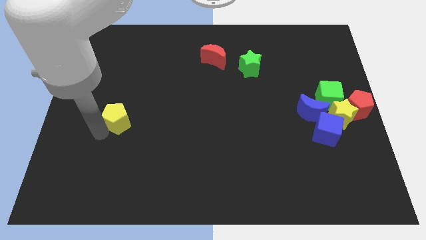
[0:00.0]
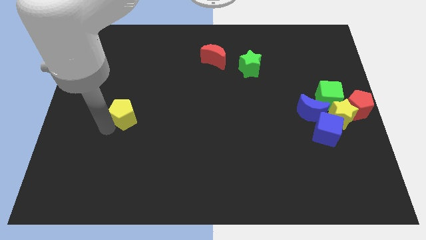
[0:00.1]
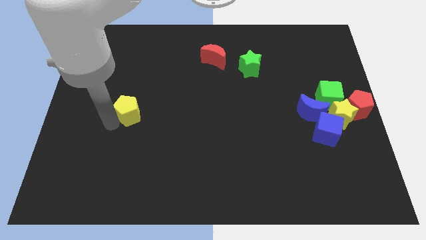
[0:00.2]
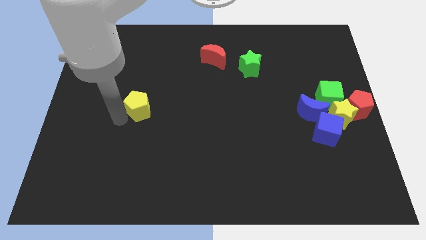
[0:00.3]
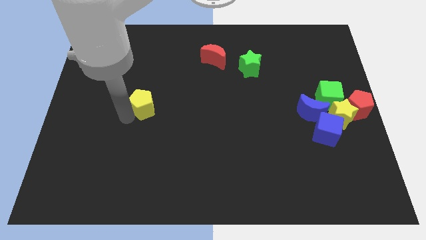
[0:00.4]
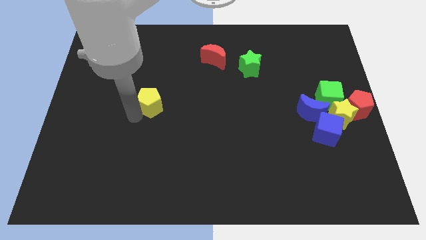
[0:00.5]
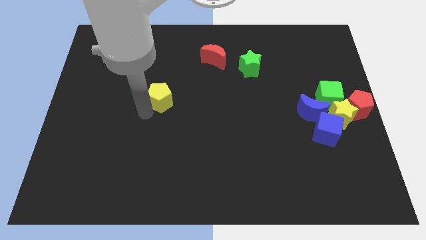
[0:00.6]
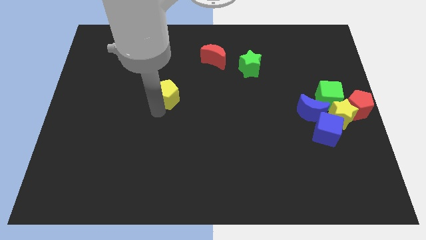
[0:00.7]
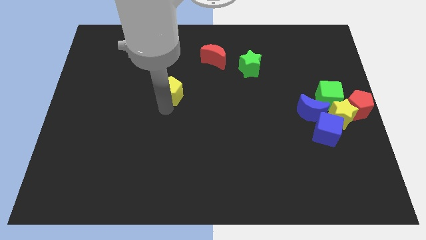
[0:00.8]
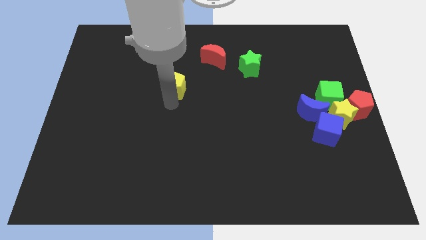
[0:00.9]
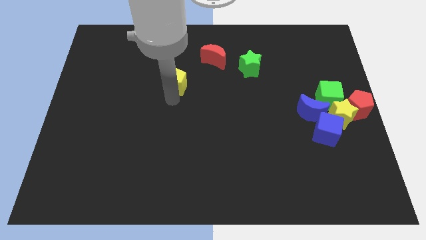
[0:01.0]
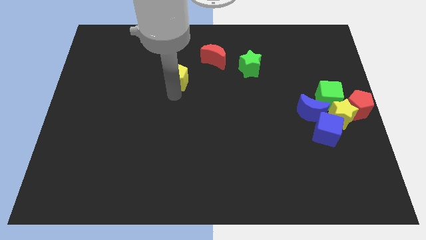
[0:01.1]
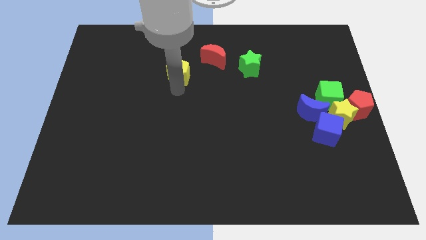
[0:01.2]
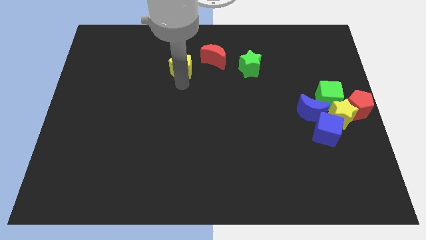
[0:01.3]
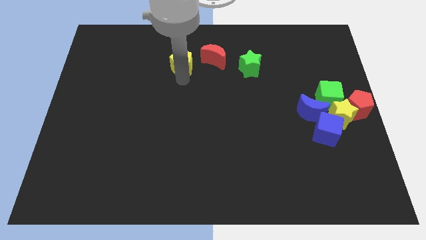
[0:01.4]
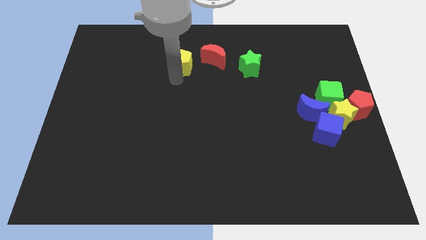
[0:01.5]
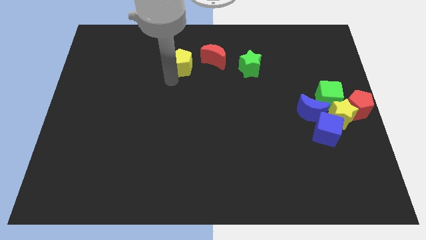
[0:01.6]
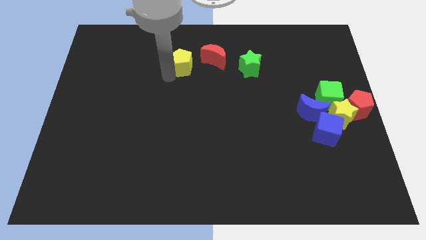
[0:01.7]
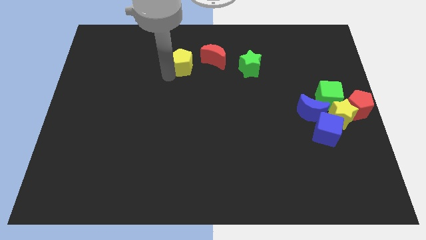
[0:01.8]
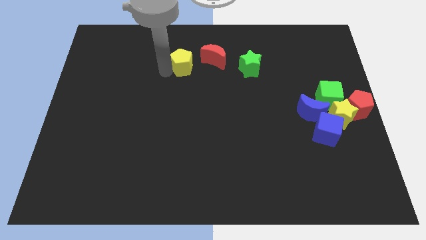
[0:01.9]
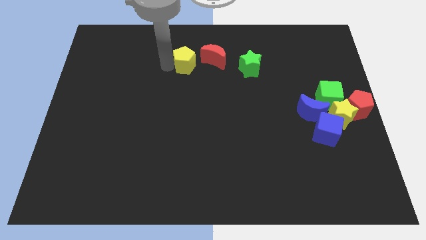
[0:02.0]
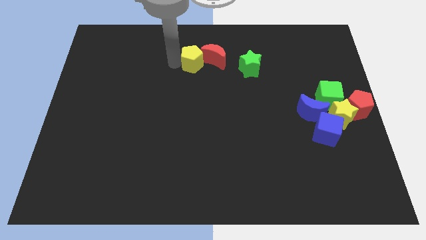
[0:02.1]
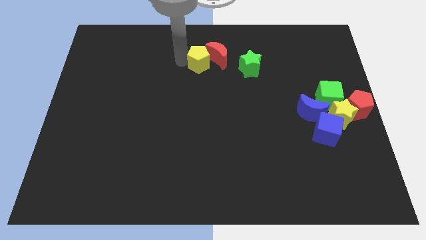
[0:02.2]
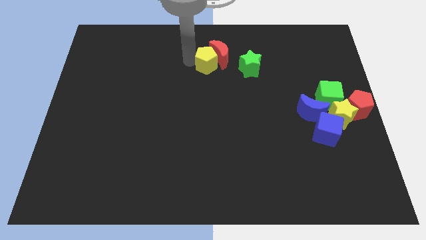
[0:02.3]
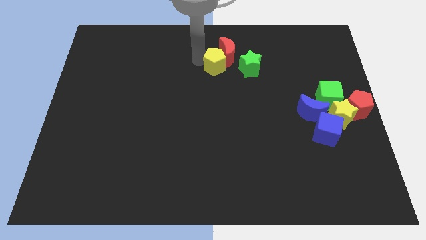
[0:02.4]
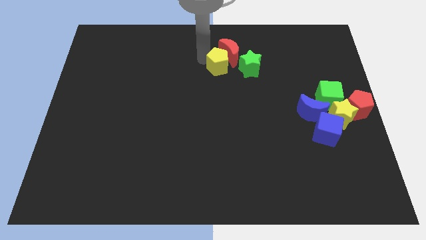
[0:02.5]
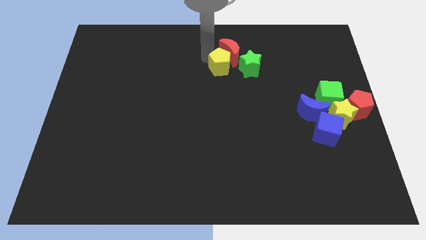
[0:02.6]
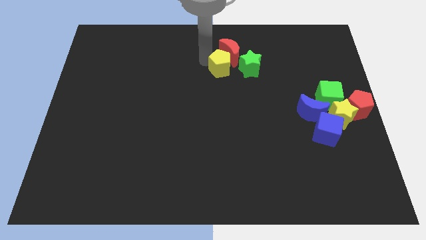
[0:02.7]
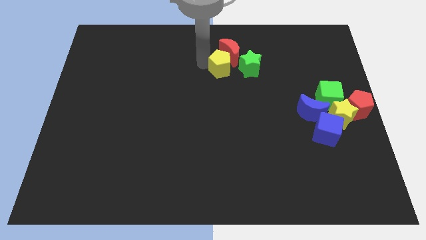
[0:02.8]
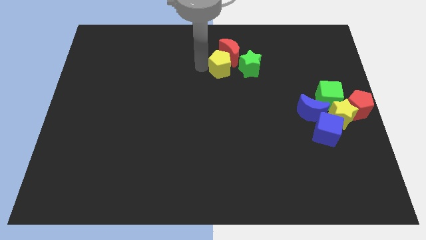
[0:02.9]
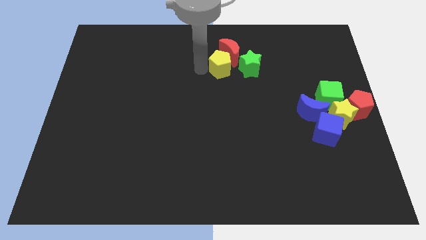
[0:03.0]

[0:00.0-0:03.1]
slide the yellow pentagon into the red moon

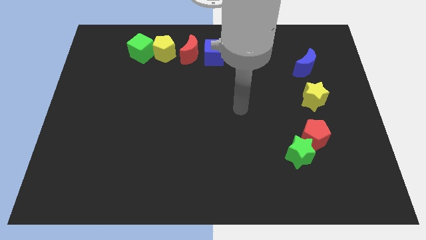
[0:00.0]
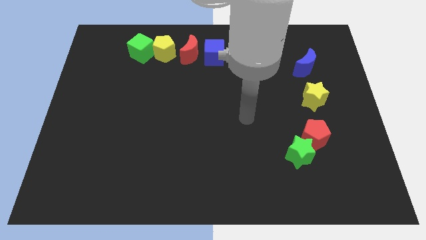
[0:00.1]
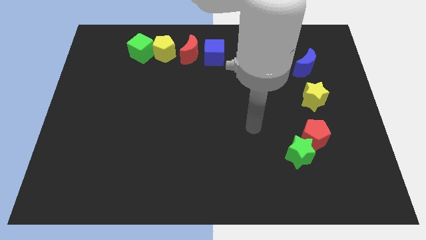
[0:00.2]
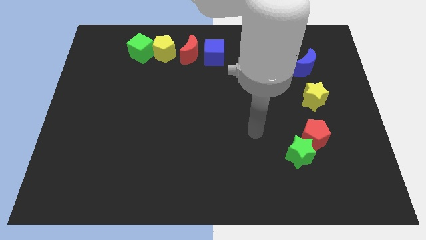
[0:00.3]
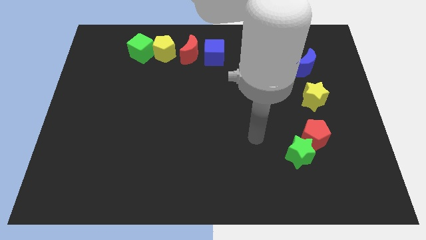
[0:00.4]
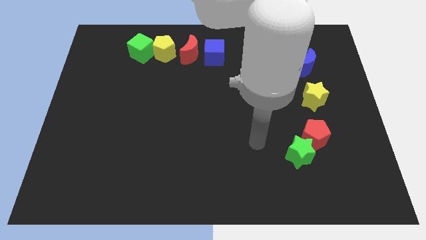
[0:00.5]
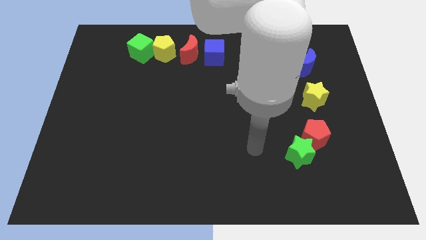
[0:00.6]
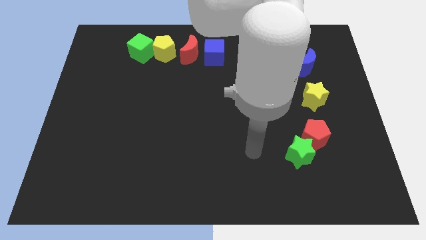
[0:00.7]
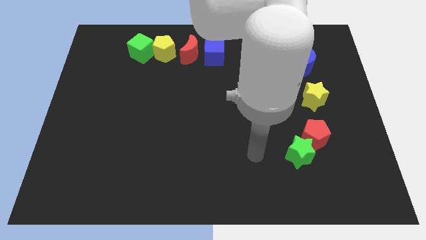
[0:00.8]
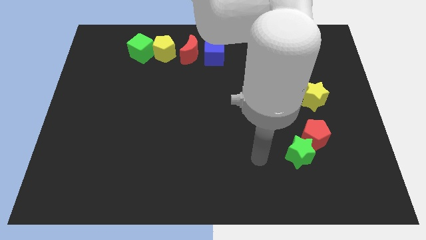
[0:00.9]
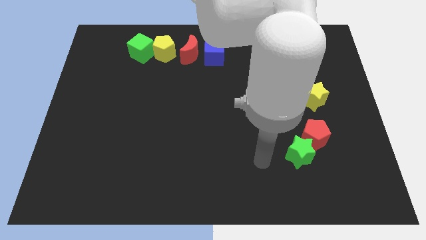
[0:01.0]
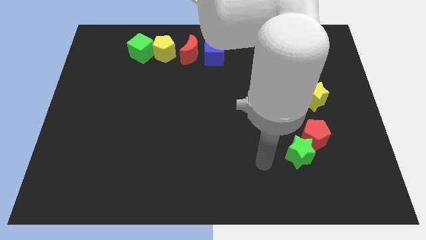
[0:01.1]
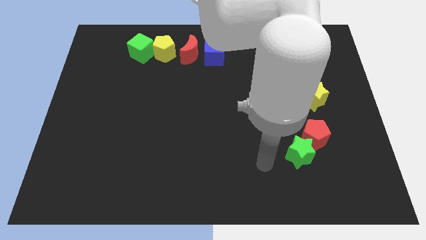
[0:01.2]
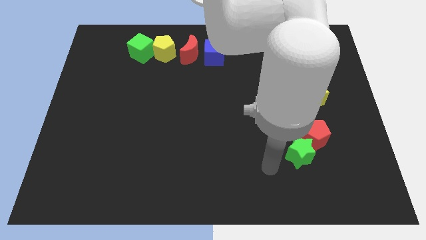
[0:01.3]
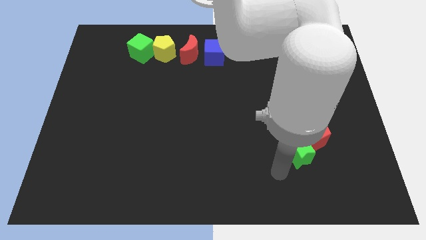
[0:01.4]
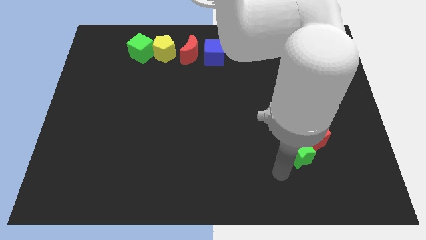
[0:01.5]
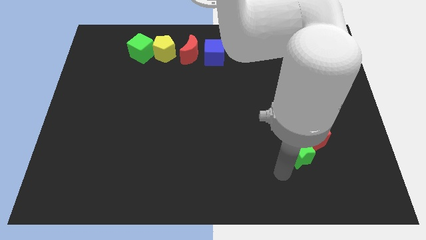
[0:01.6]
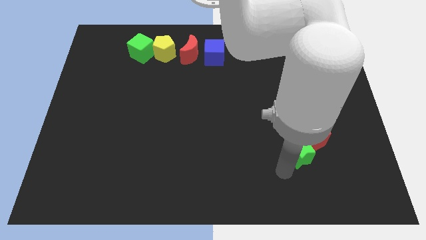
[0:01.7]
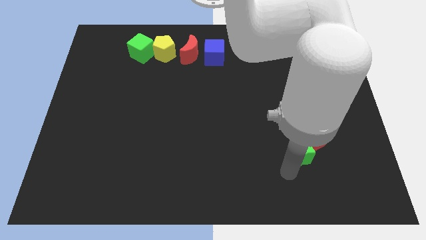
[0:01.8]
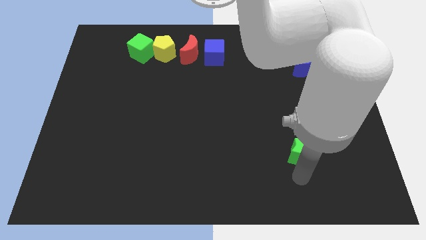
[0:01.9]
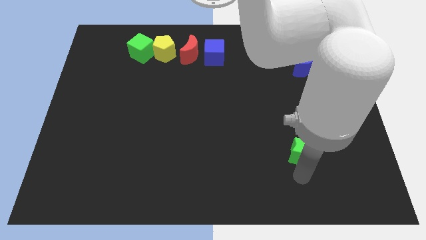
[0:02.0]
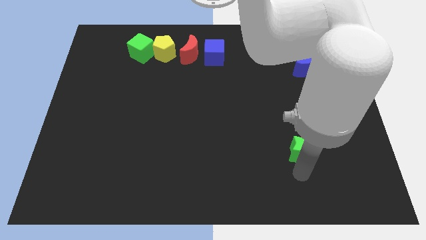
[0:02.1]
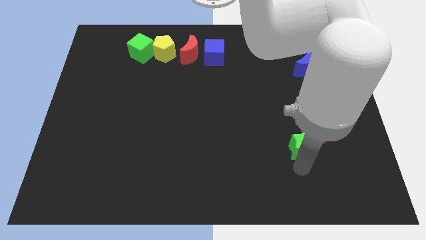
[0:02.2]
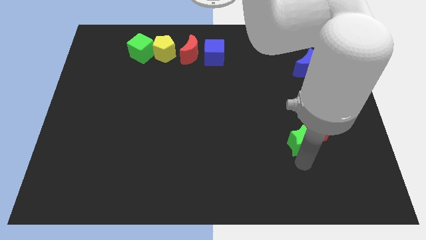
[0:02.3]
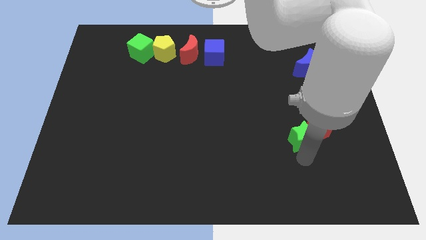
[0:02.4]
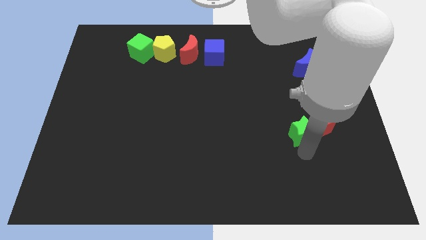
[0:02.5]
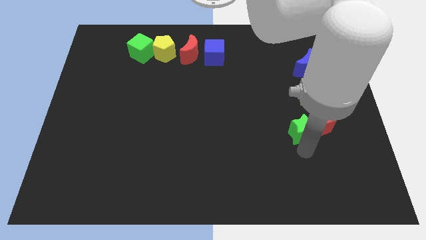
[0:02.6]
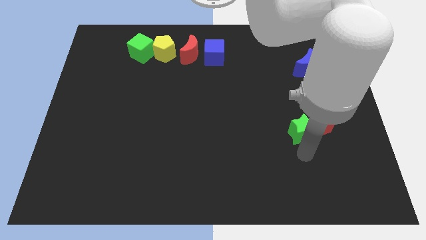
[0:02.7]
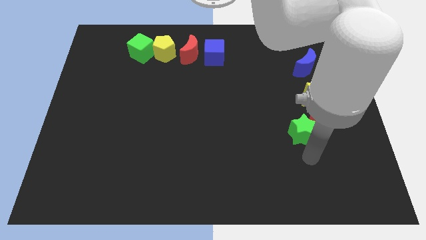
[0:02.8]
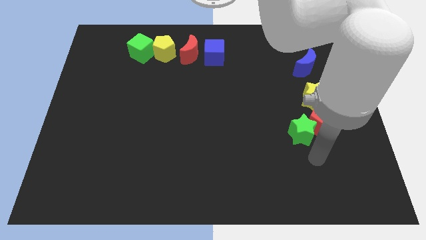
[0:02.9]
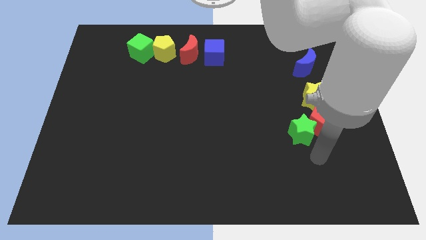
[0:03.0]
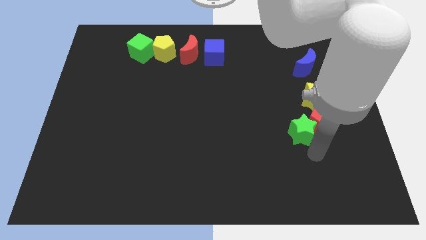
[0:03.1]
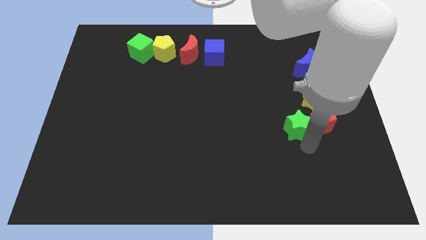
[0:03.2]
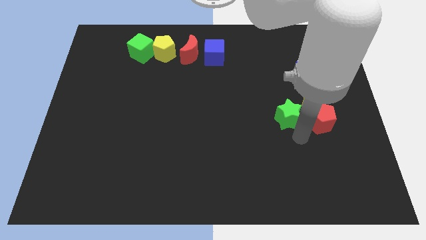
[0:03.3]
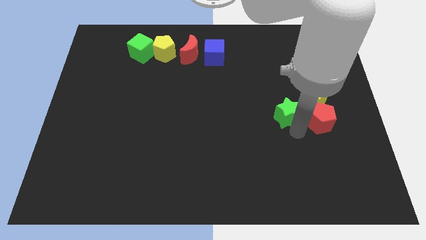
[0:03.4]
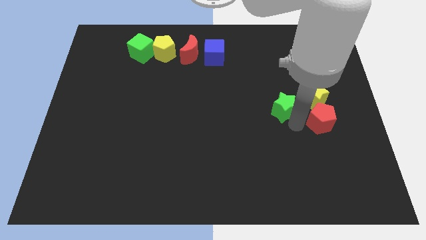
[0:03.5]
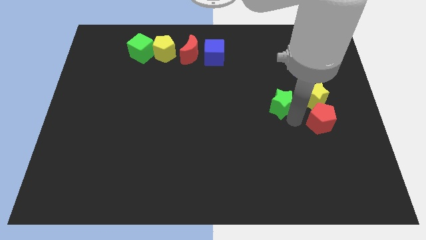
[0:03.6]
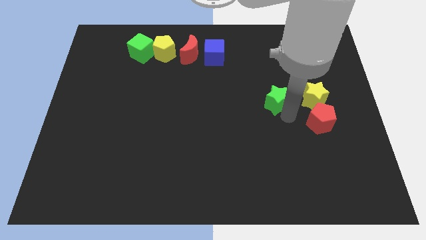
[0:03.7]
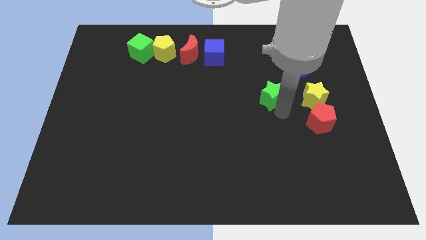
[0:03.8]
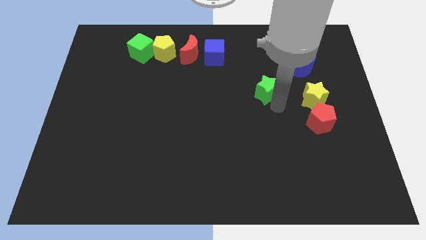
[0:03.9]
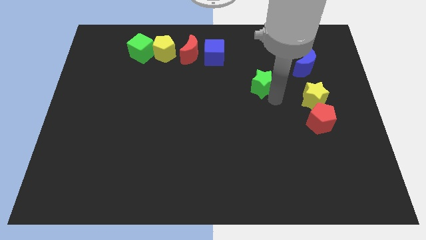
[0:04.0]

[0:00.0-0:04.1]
separate the green star and the red pentagon

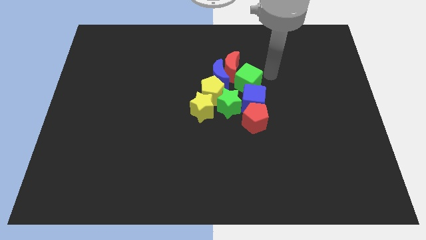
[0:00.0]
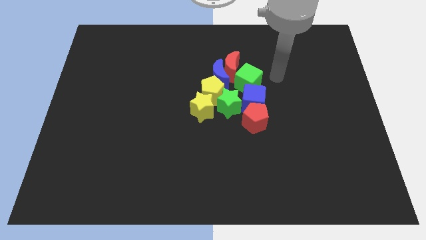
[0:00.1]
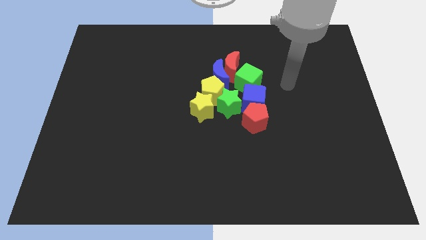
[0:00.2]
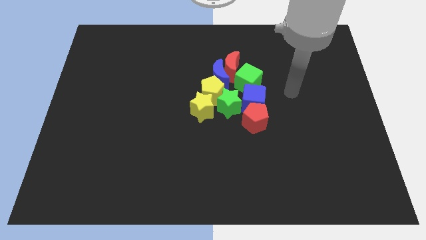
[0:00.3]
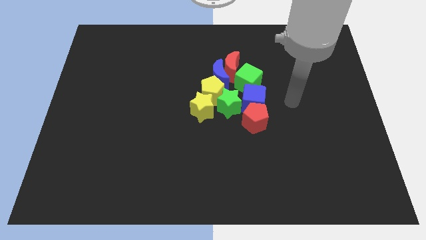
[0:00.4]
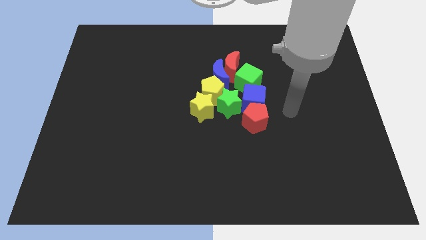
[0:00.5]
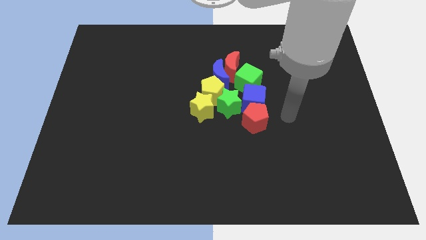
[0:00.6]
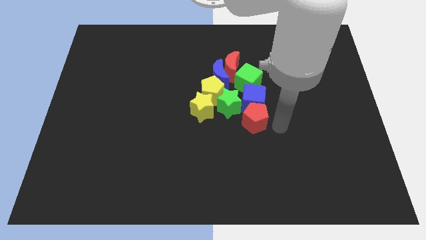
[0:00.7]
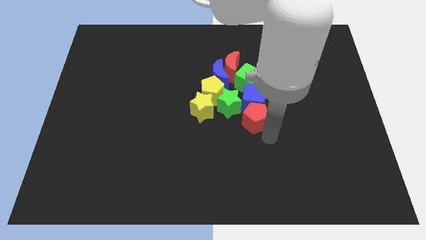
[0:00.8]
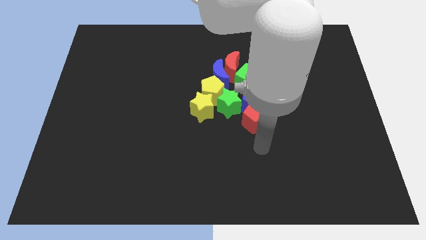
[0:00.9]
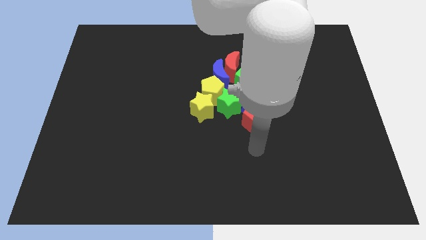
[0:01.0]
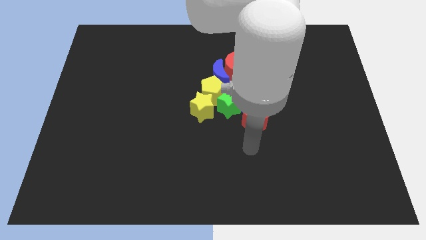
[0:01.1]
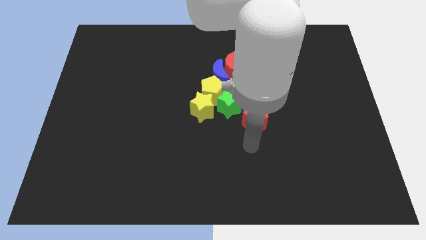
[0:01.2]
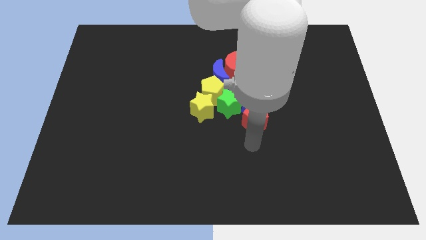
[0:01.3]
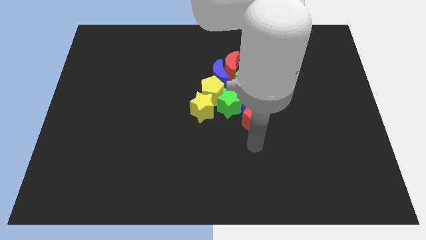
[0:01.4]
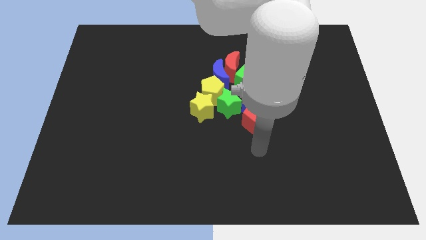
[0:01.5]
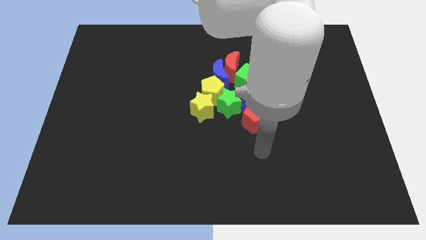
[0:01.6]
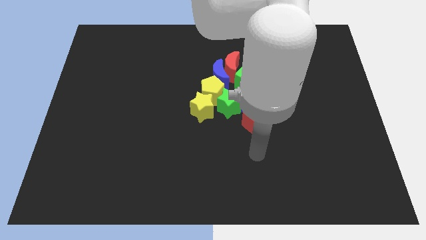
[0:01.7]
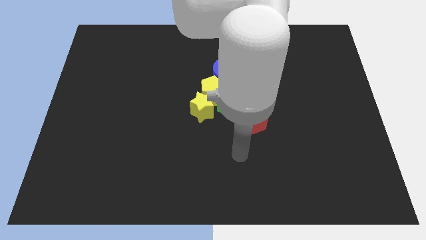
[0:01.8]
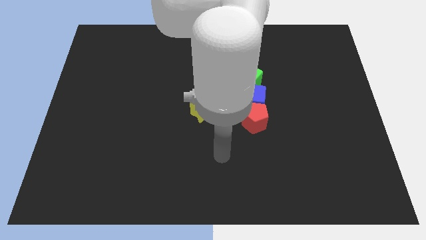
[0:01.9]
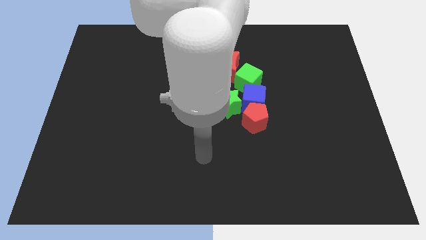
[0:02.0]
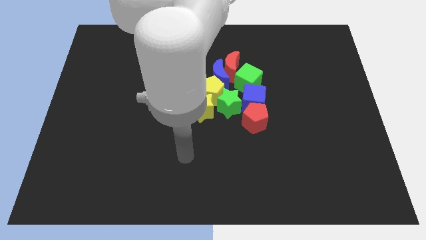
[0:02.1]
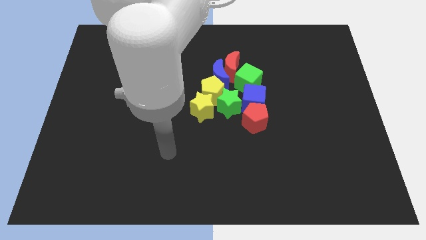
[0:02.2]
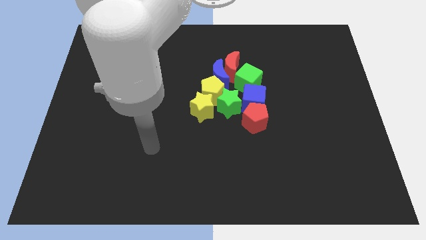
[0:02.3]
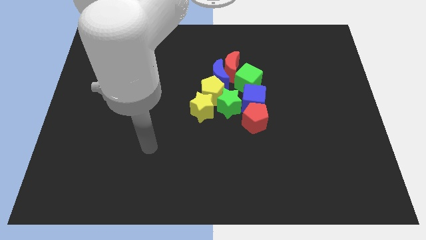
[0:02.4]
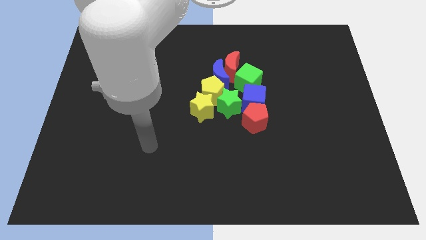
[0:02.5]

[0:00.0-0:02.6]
move the arm away from the green cube
